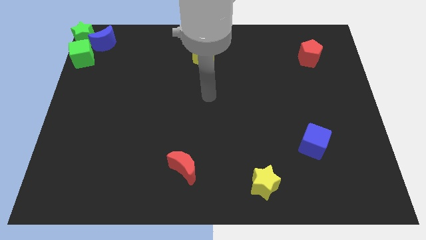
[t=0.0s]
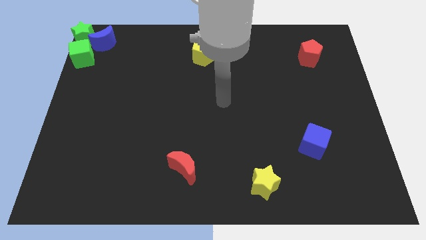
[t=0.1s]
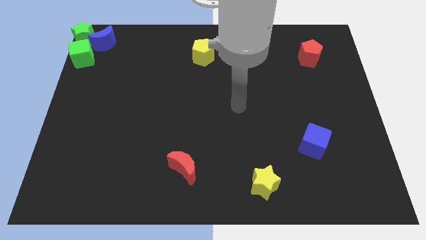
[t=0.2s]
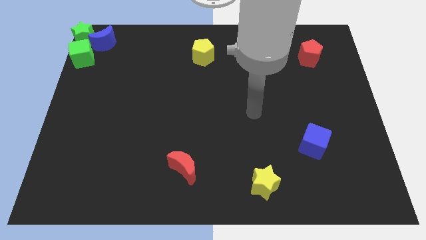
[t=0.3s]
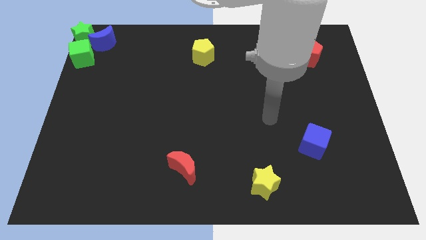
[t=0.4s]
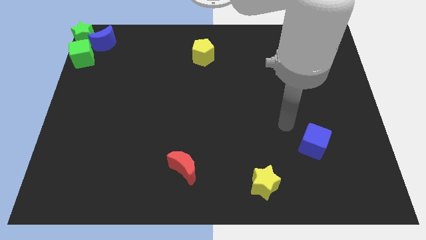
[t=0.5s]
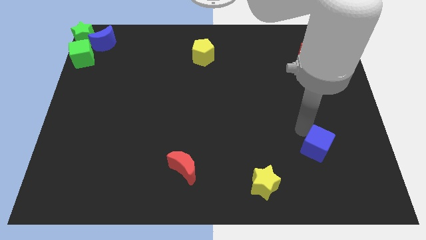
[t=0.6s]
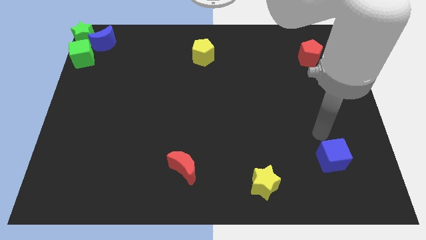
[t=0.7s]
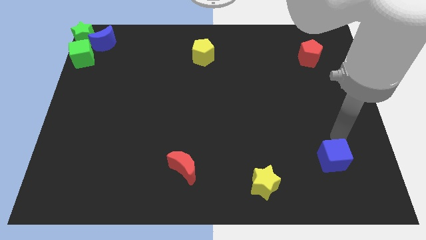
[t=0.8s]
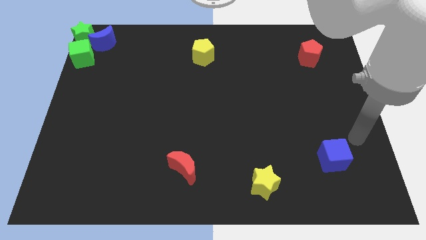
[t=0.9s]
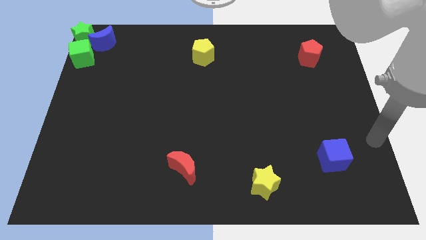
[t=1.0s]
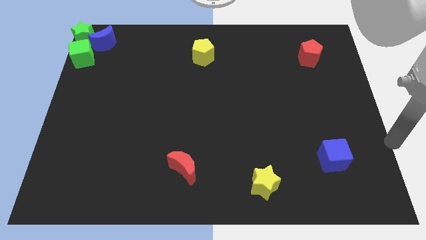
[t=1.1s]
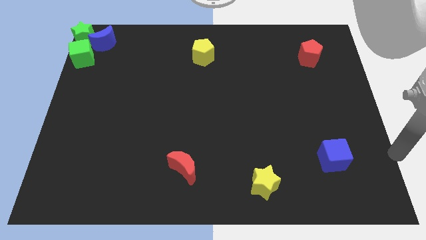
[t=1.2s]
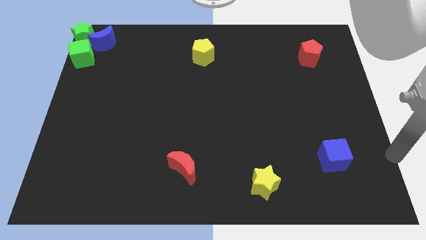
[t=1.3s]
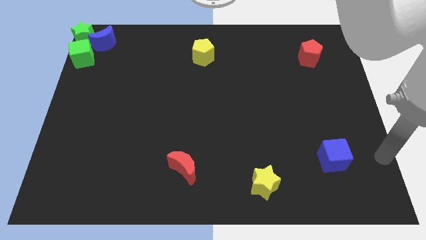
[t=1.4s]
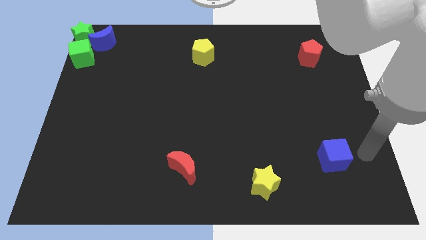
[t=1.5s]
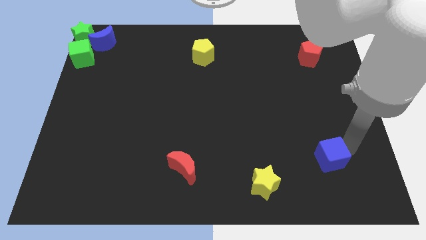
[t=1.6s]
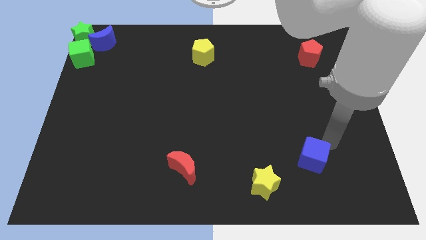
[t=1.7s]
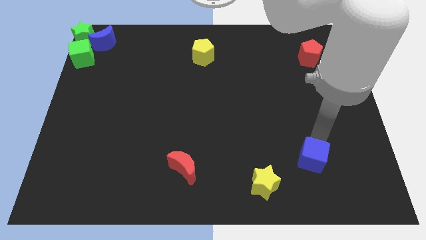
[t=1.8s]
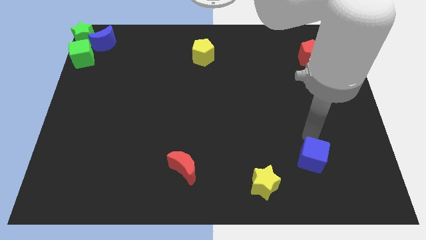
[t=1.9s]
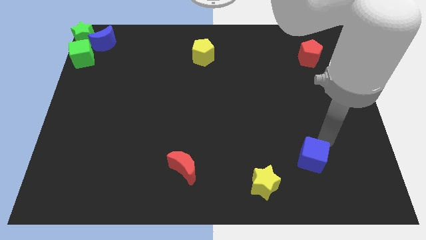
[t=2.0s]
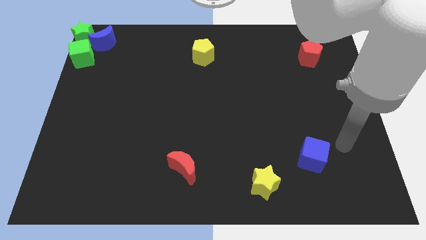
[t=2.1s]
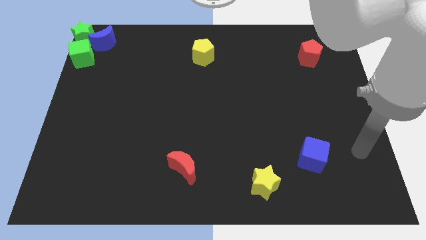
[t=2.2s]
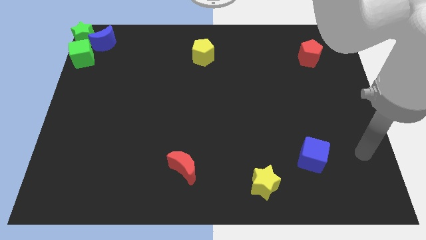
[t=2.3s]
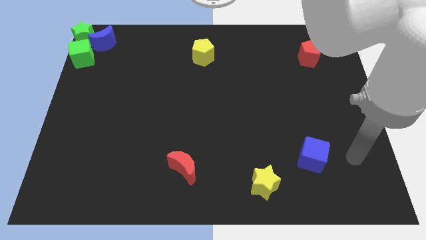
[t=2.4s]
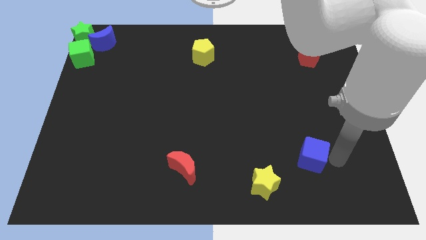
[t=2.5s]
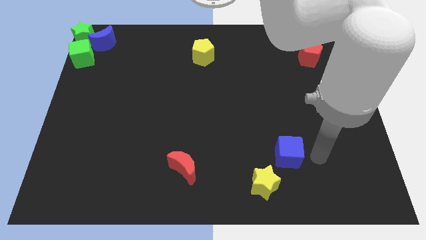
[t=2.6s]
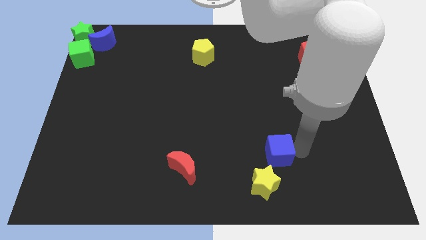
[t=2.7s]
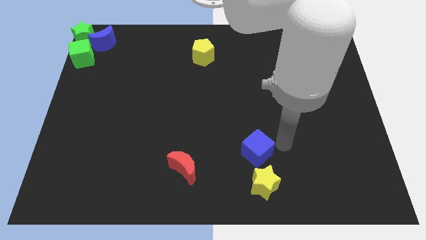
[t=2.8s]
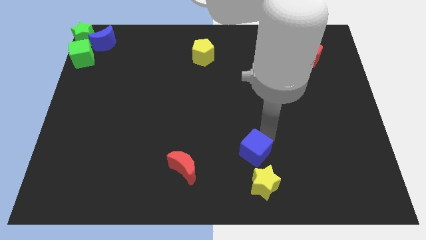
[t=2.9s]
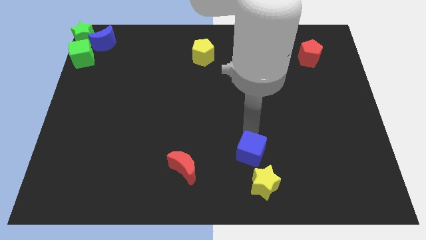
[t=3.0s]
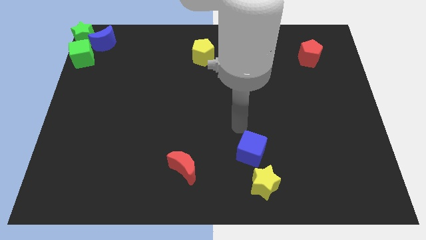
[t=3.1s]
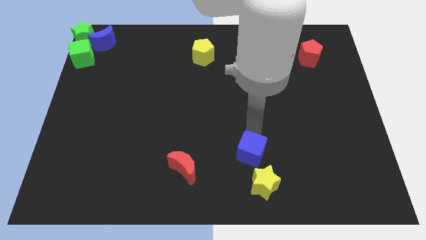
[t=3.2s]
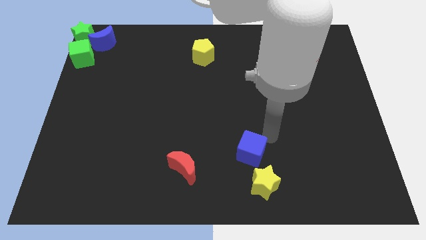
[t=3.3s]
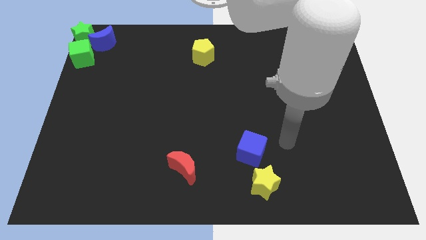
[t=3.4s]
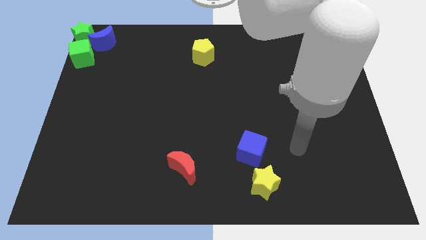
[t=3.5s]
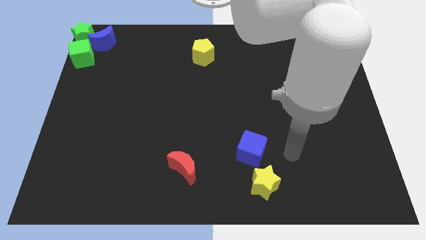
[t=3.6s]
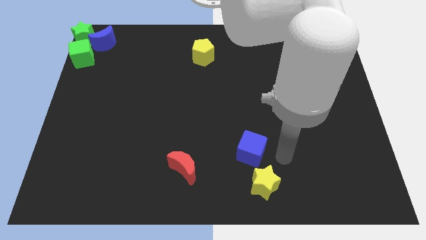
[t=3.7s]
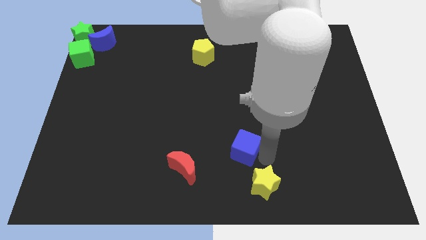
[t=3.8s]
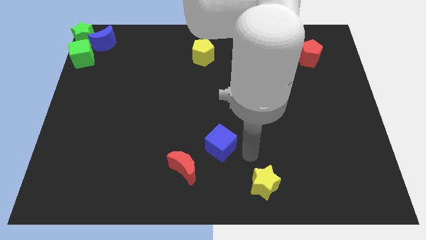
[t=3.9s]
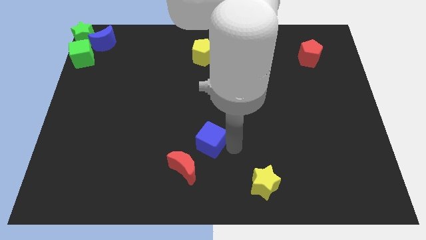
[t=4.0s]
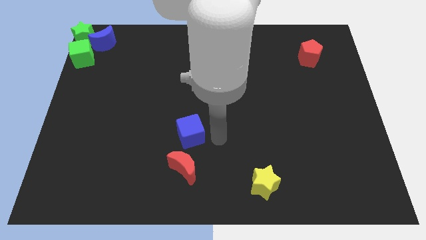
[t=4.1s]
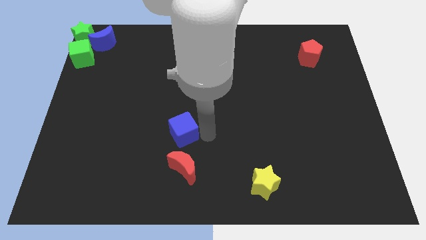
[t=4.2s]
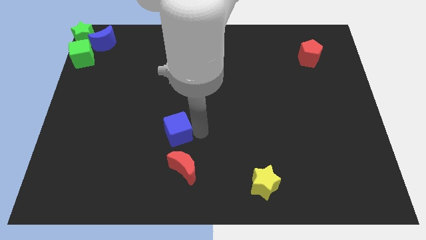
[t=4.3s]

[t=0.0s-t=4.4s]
place the blue cube above the red crescent

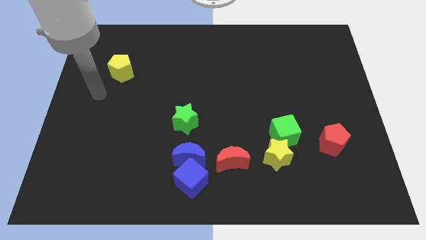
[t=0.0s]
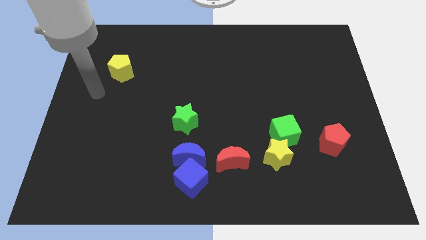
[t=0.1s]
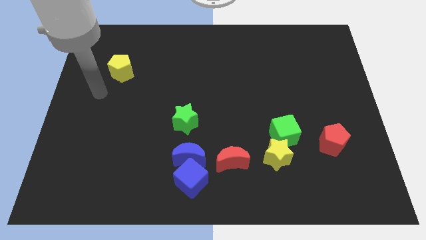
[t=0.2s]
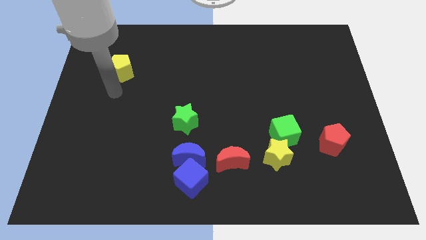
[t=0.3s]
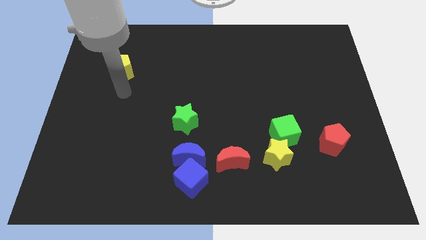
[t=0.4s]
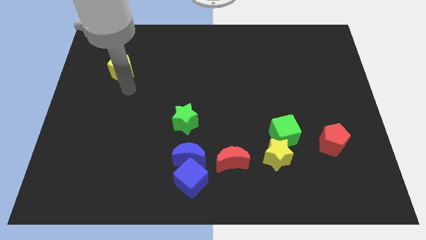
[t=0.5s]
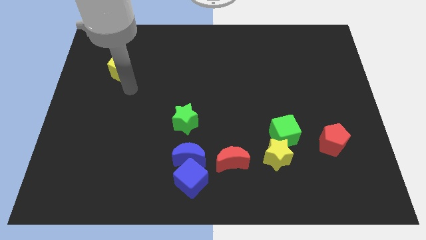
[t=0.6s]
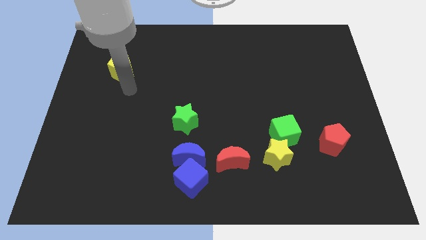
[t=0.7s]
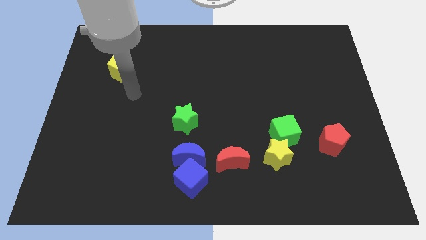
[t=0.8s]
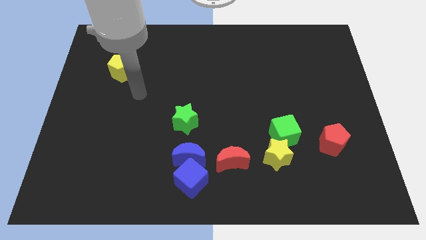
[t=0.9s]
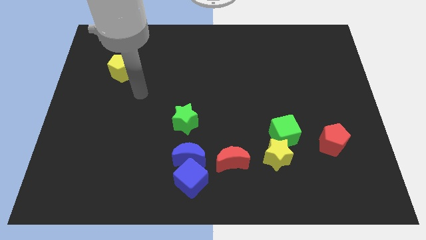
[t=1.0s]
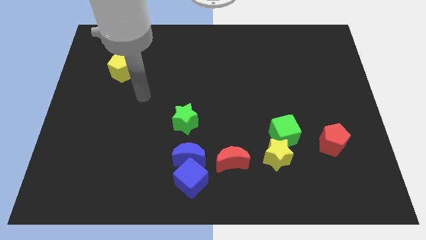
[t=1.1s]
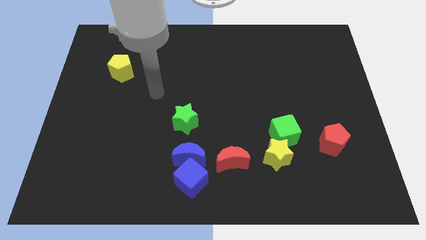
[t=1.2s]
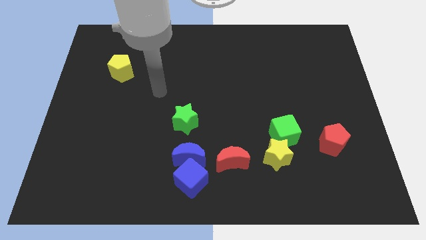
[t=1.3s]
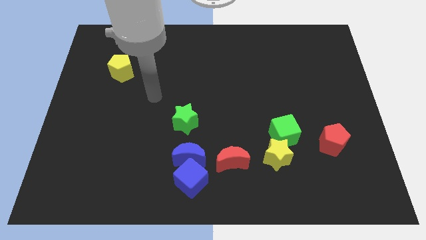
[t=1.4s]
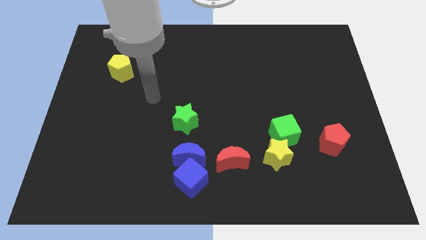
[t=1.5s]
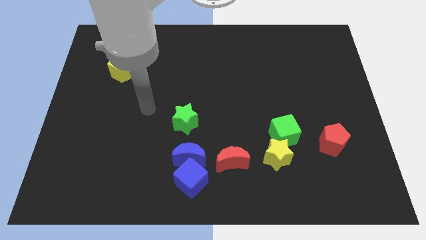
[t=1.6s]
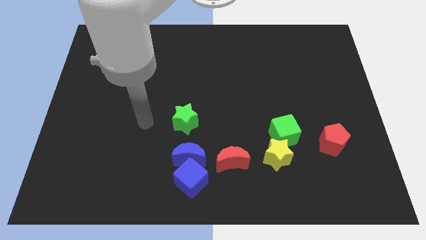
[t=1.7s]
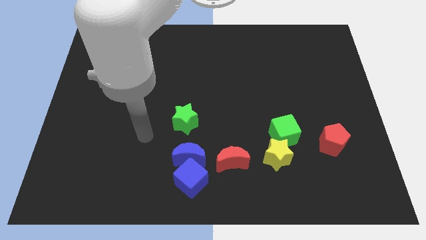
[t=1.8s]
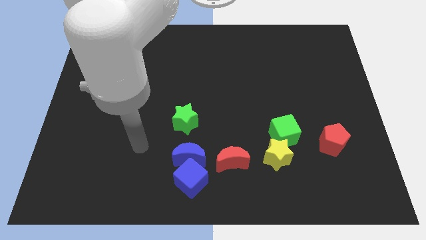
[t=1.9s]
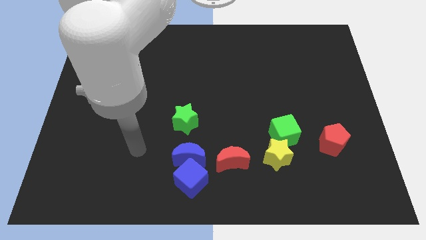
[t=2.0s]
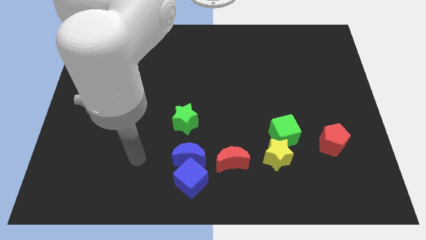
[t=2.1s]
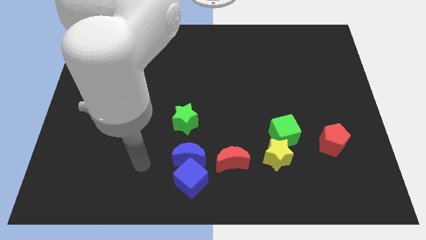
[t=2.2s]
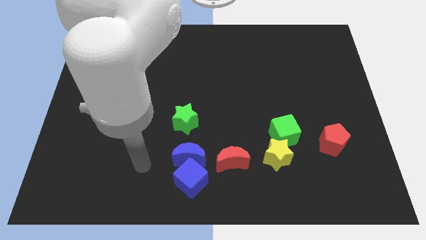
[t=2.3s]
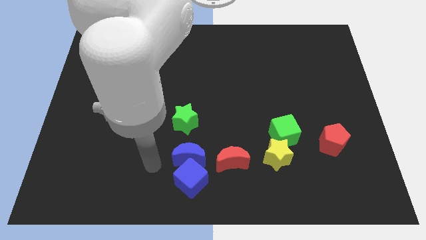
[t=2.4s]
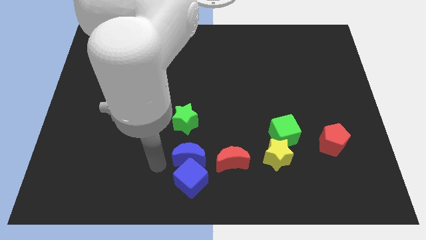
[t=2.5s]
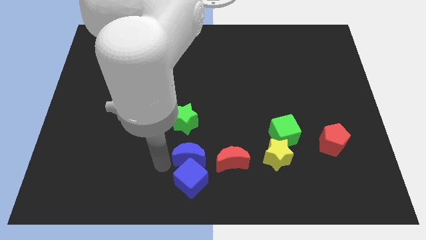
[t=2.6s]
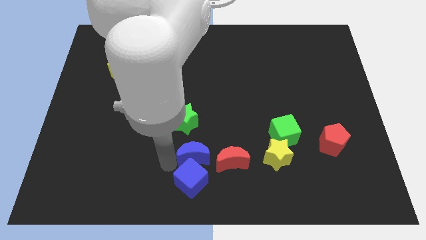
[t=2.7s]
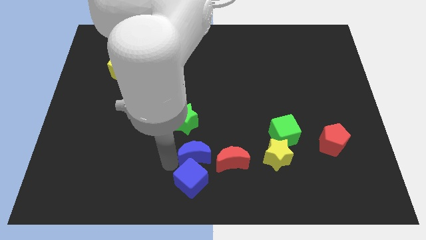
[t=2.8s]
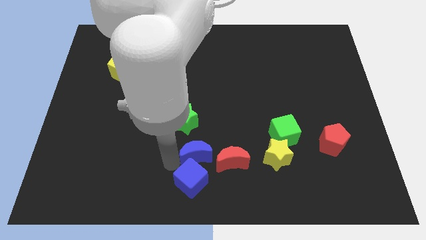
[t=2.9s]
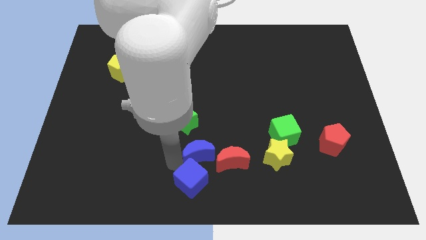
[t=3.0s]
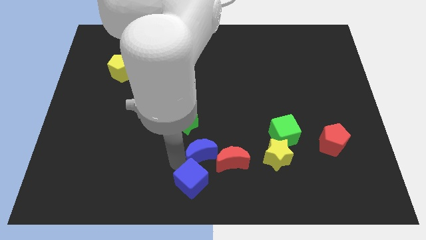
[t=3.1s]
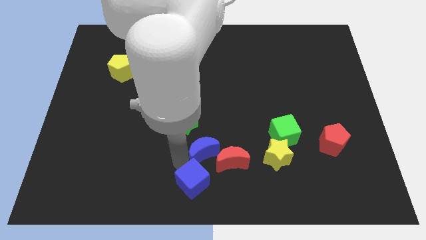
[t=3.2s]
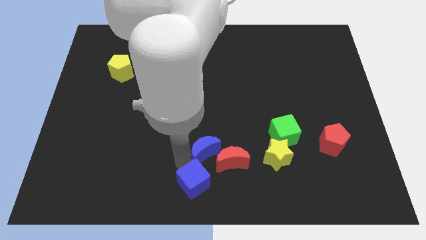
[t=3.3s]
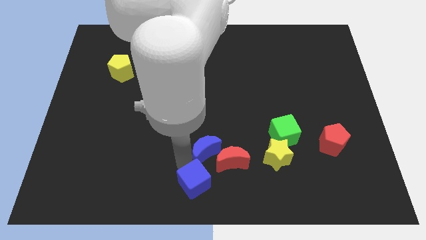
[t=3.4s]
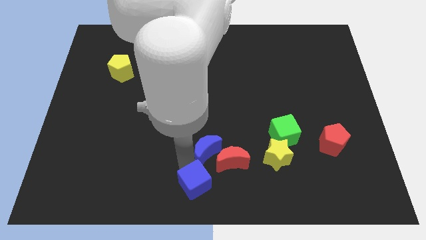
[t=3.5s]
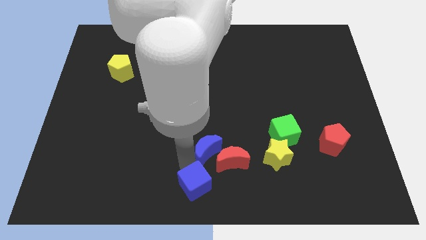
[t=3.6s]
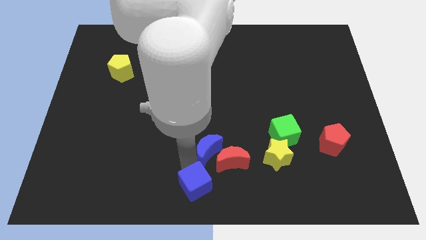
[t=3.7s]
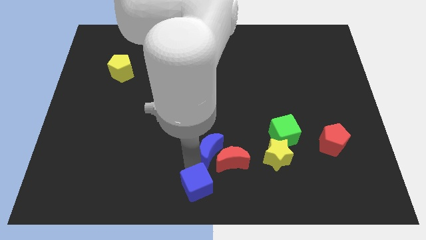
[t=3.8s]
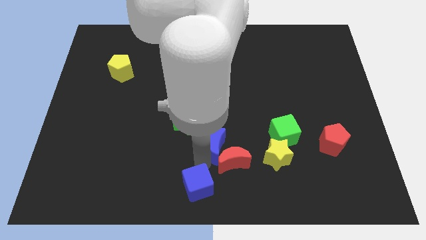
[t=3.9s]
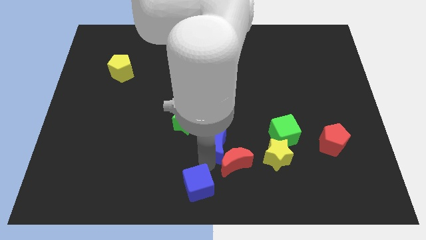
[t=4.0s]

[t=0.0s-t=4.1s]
separate the blue blocks from each other

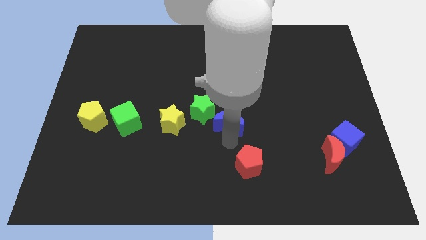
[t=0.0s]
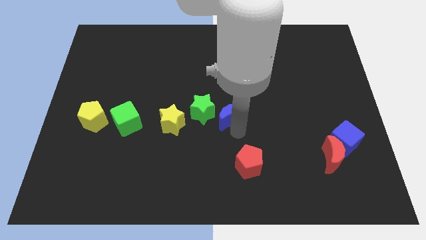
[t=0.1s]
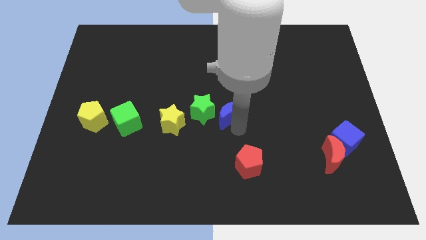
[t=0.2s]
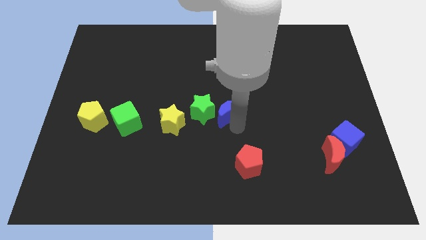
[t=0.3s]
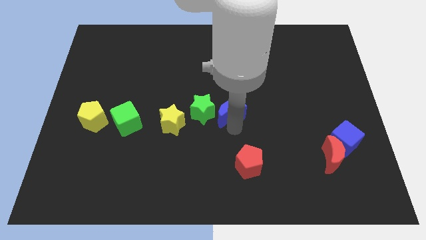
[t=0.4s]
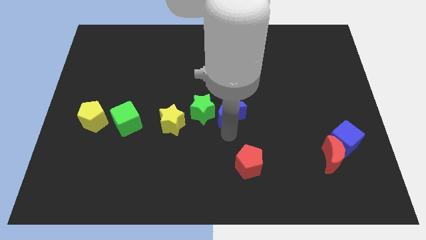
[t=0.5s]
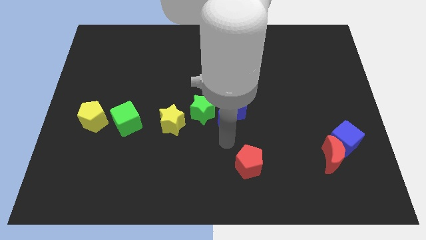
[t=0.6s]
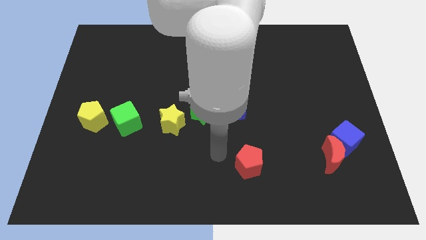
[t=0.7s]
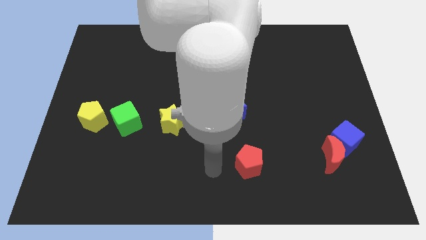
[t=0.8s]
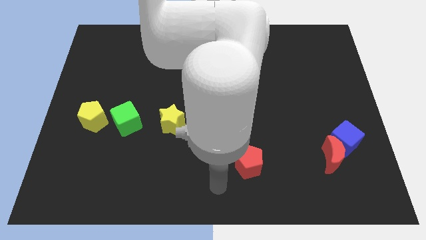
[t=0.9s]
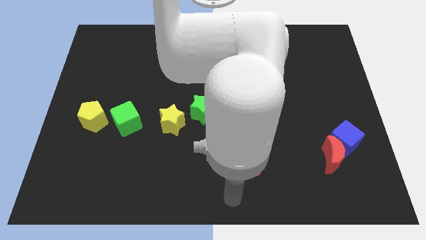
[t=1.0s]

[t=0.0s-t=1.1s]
move blue moon right beside the green star
